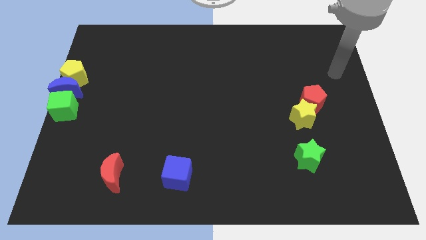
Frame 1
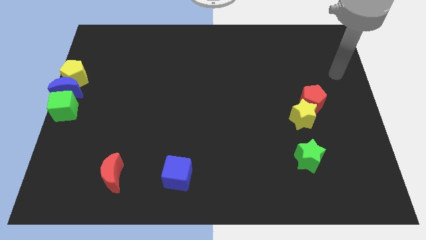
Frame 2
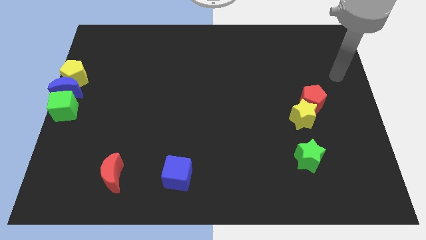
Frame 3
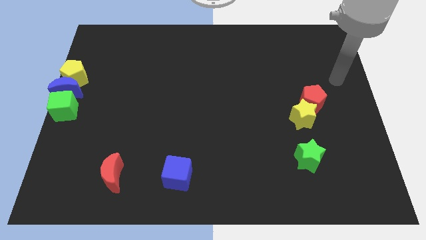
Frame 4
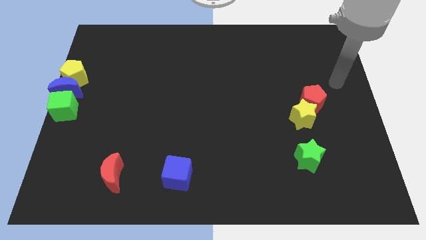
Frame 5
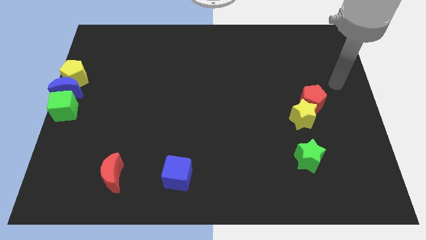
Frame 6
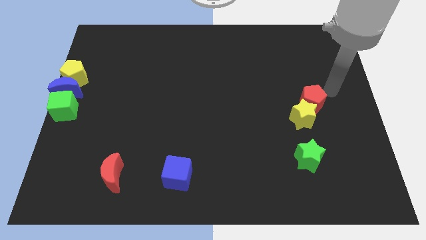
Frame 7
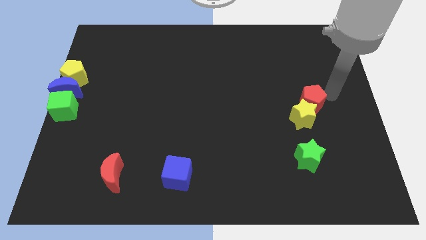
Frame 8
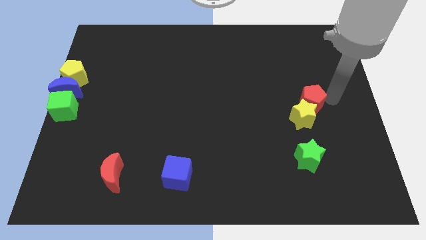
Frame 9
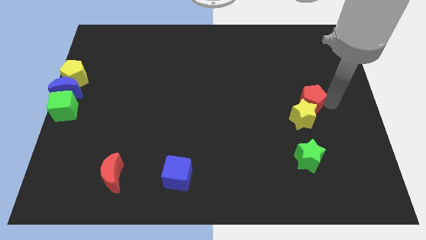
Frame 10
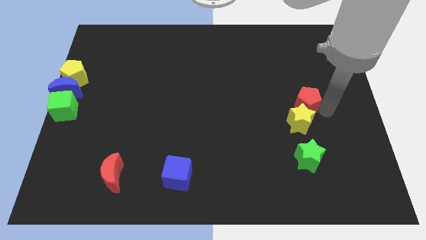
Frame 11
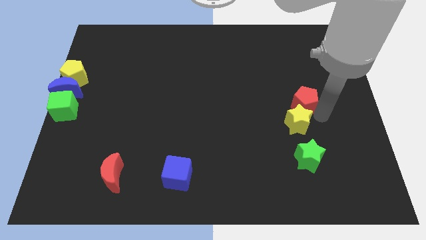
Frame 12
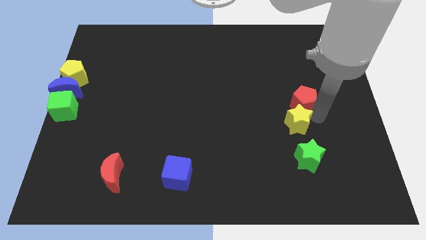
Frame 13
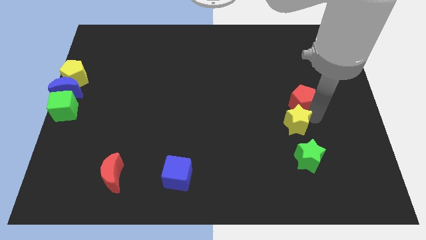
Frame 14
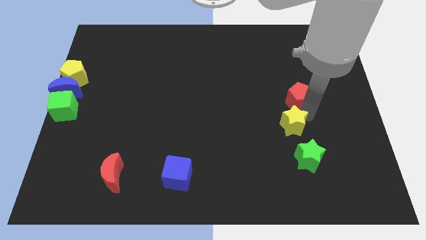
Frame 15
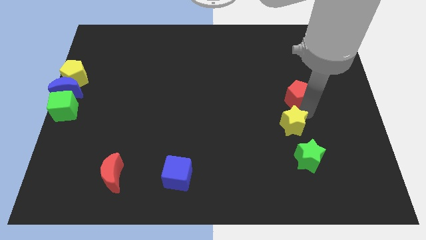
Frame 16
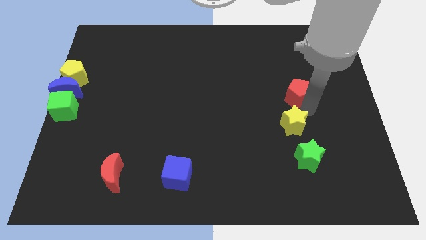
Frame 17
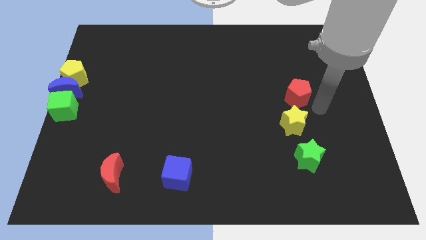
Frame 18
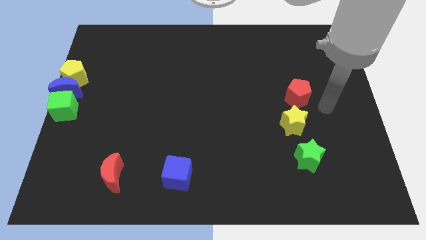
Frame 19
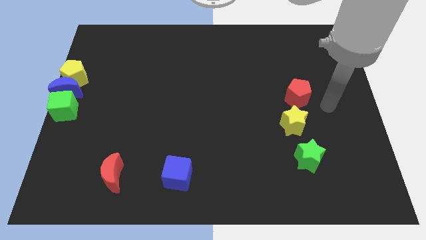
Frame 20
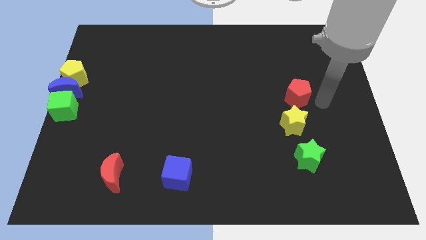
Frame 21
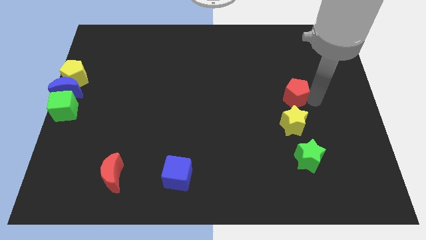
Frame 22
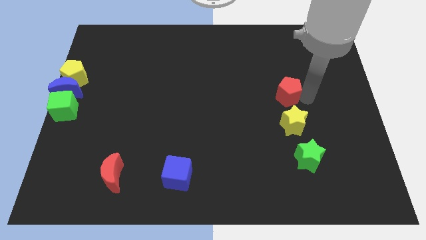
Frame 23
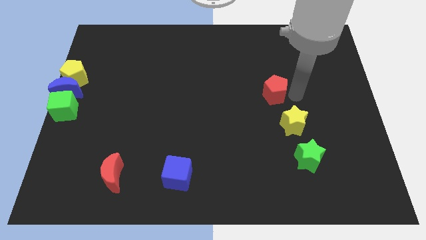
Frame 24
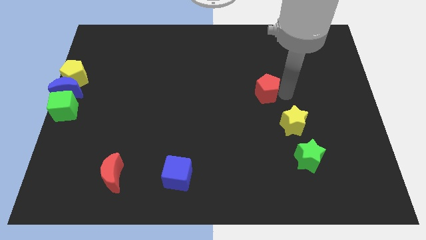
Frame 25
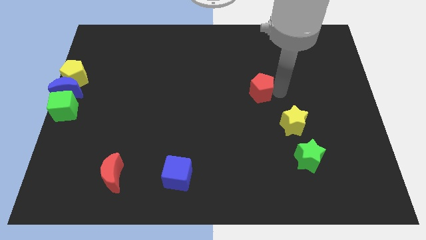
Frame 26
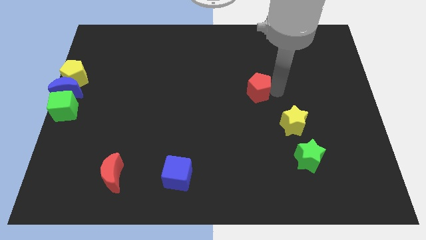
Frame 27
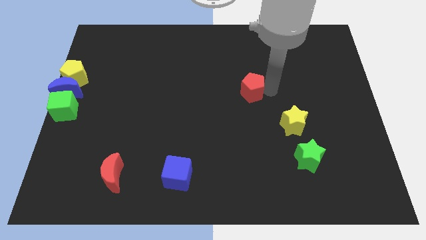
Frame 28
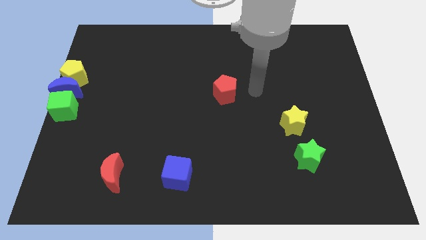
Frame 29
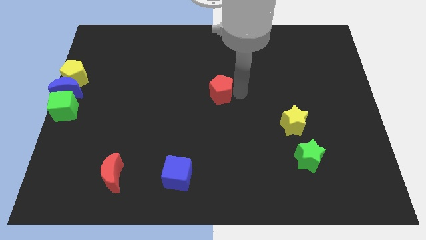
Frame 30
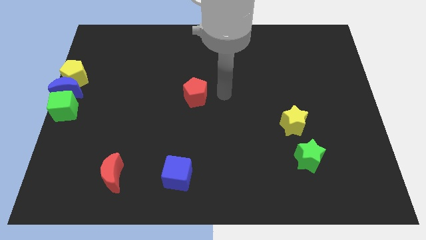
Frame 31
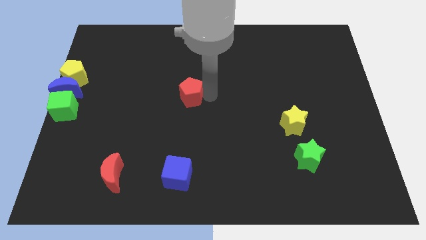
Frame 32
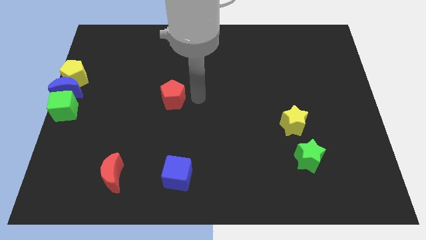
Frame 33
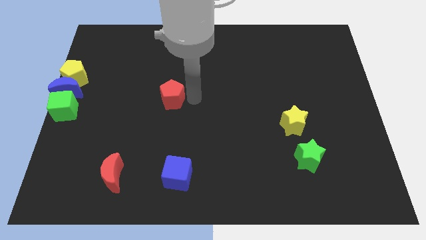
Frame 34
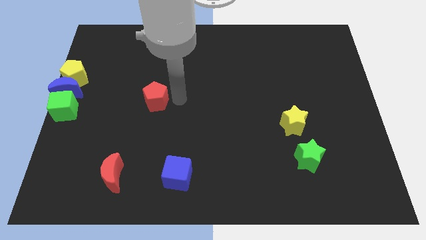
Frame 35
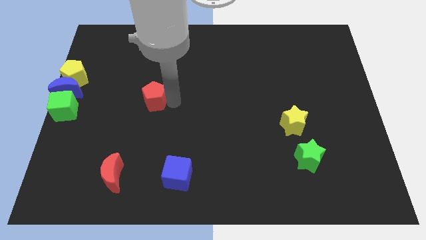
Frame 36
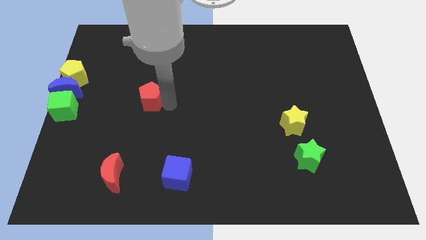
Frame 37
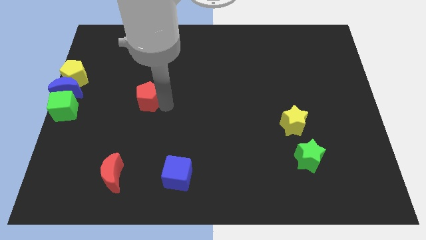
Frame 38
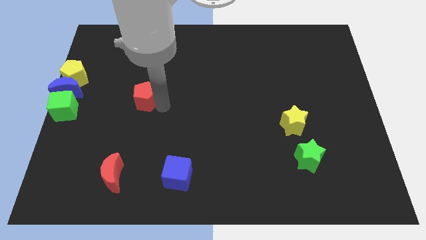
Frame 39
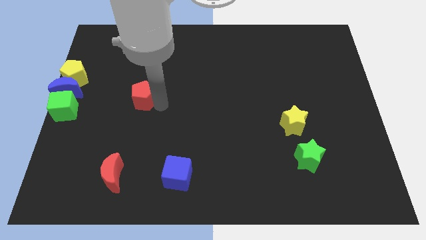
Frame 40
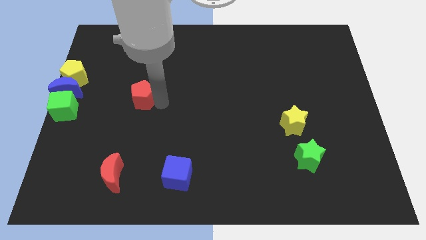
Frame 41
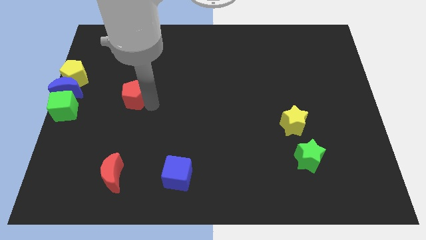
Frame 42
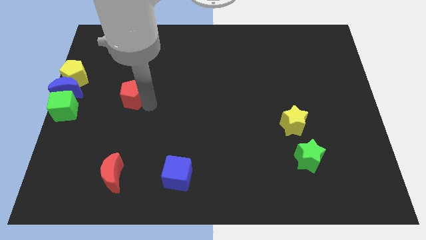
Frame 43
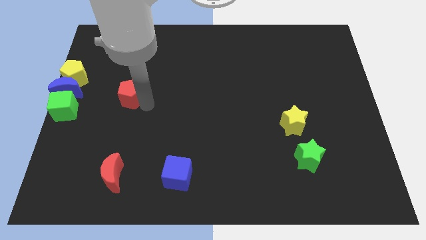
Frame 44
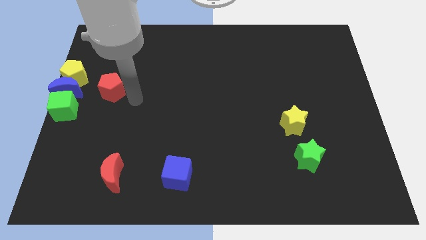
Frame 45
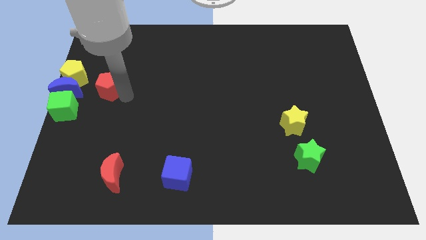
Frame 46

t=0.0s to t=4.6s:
move the red pentagon slightly to the left

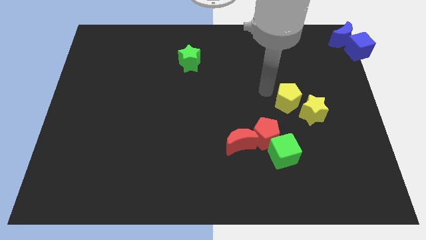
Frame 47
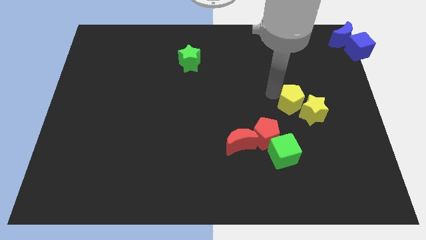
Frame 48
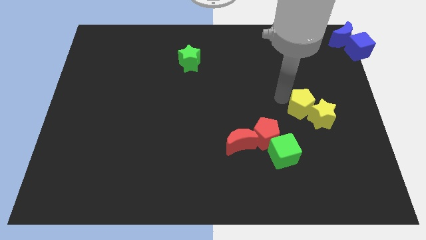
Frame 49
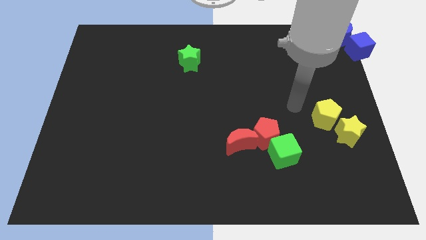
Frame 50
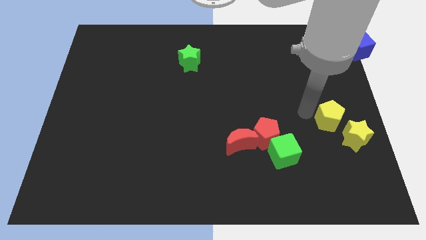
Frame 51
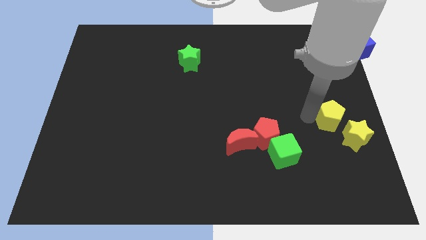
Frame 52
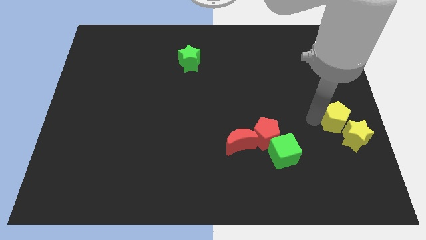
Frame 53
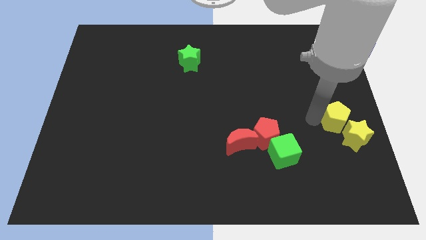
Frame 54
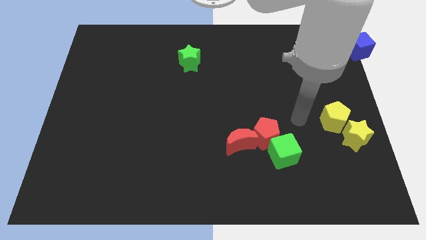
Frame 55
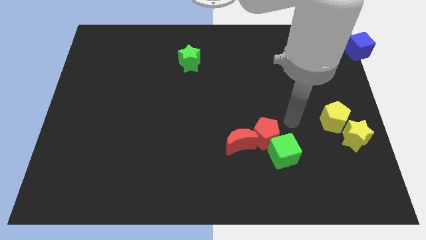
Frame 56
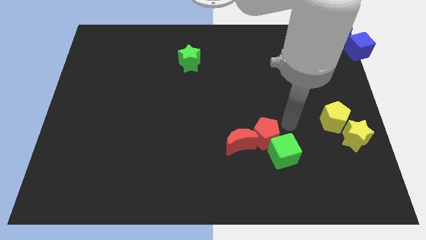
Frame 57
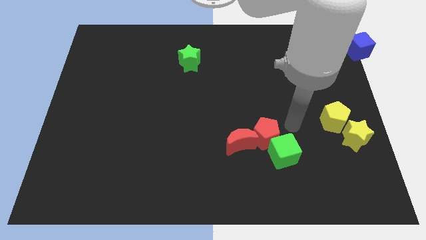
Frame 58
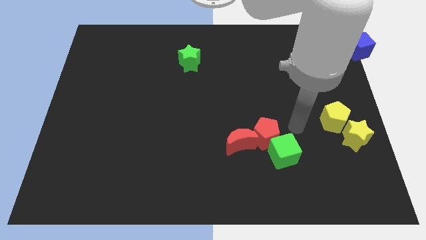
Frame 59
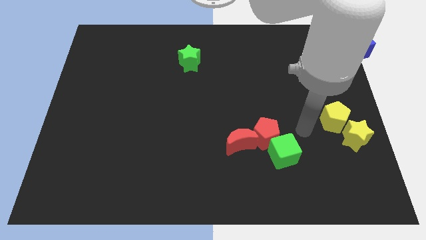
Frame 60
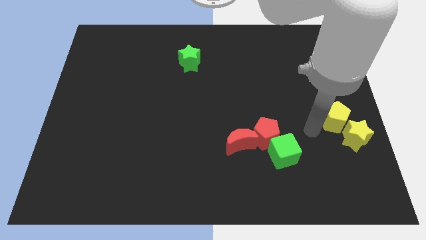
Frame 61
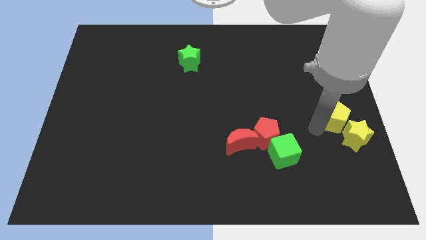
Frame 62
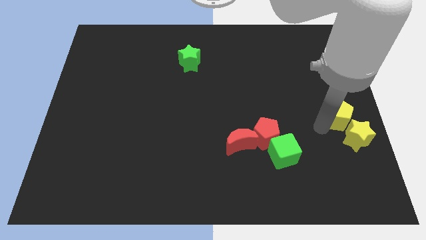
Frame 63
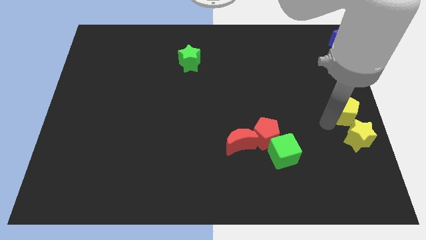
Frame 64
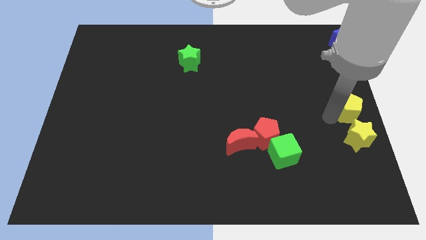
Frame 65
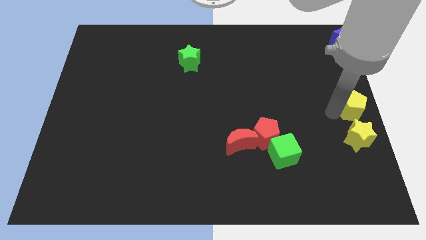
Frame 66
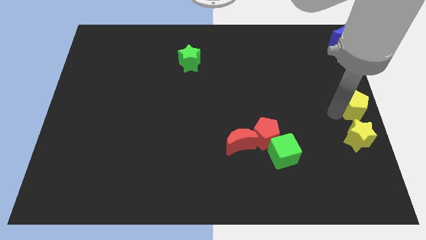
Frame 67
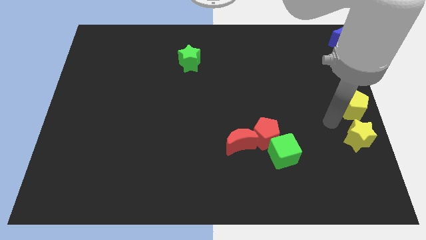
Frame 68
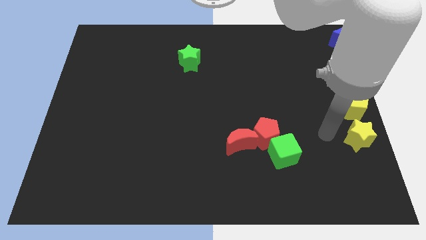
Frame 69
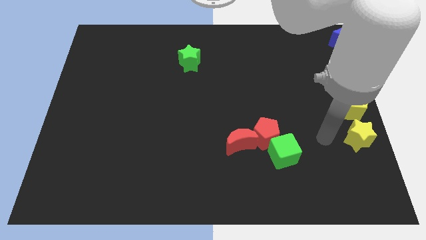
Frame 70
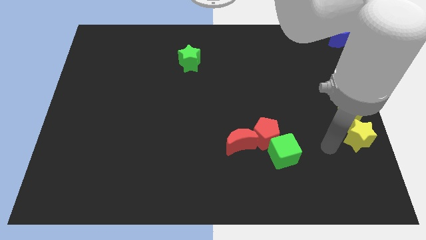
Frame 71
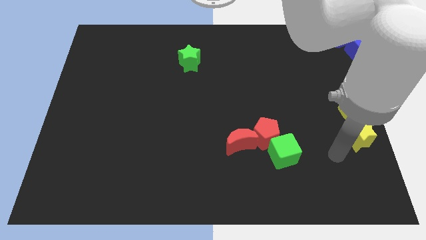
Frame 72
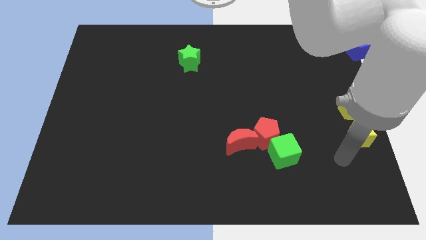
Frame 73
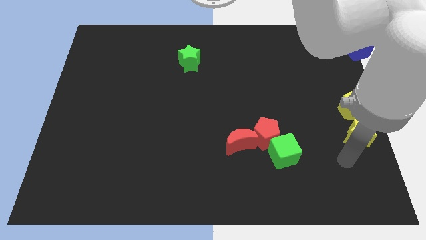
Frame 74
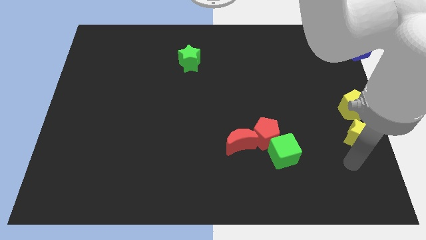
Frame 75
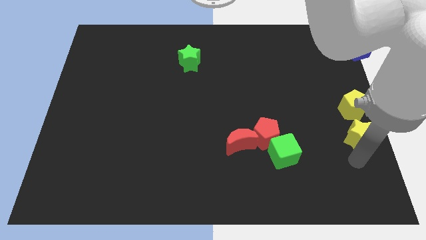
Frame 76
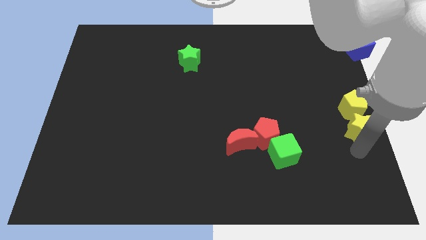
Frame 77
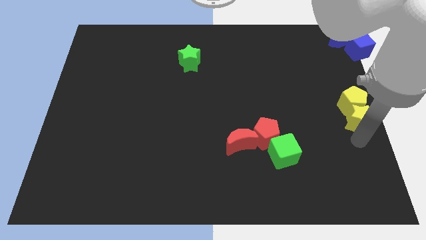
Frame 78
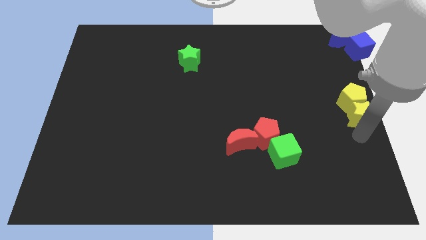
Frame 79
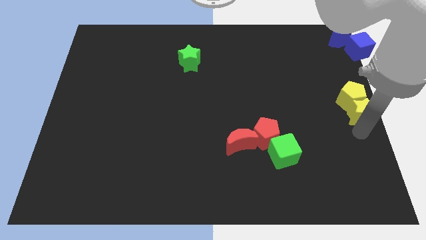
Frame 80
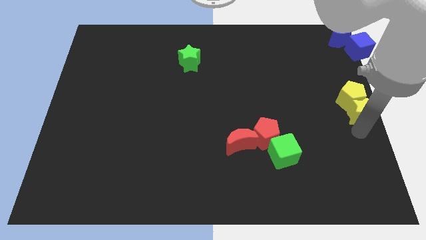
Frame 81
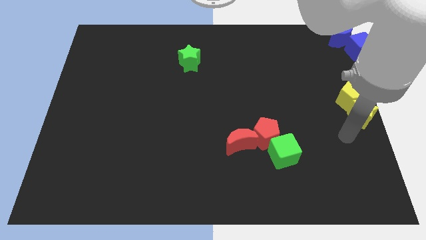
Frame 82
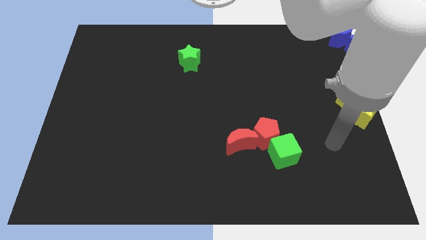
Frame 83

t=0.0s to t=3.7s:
push the yellow star along with the yellow pentgon to the right center of the board

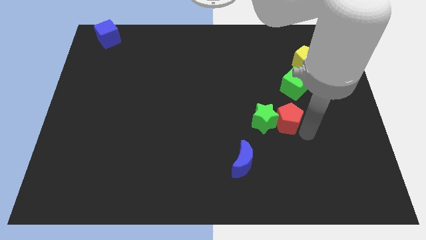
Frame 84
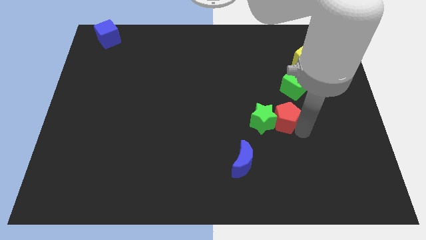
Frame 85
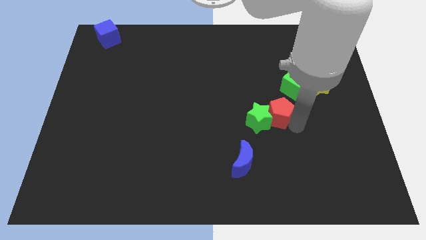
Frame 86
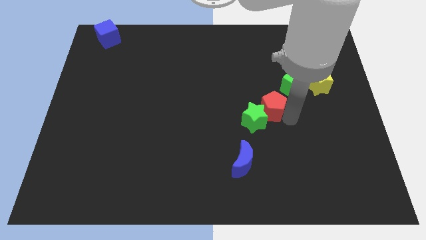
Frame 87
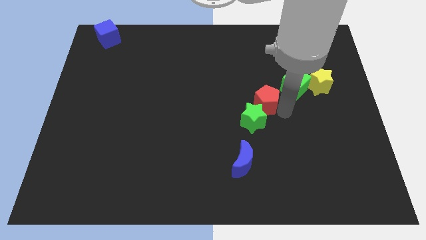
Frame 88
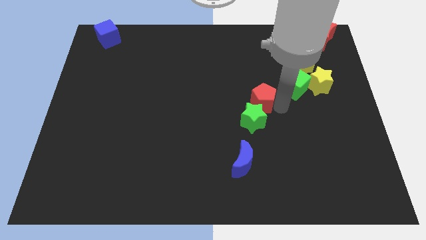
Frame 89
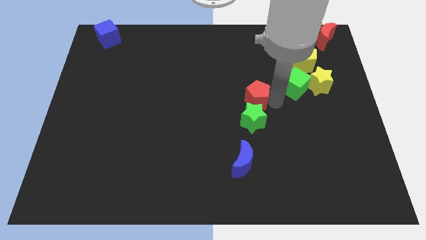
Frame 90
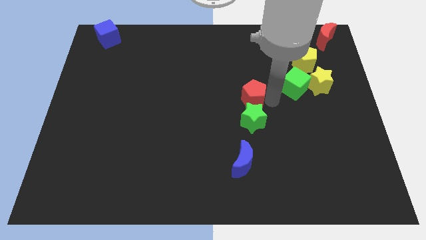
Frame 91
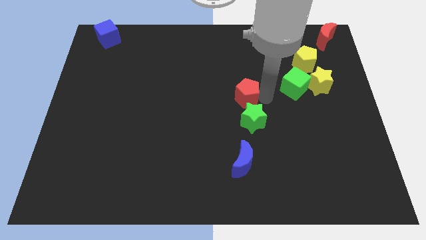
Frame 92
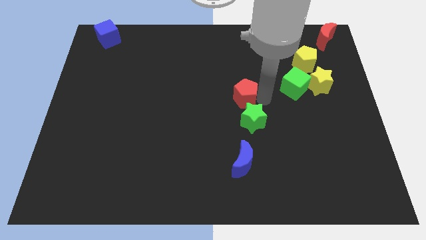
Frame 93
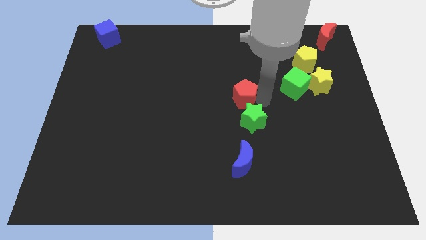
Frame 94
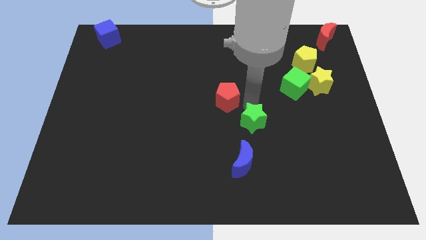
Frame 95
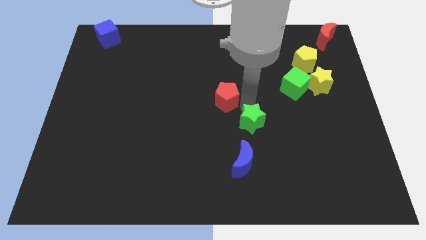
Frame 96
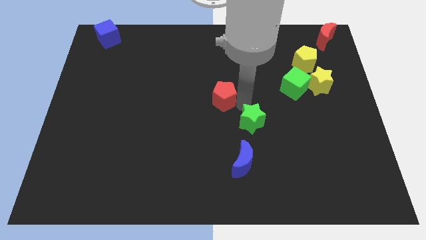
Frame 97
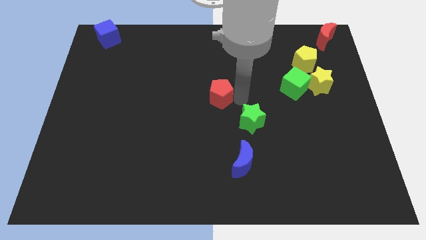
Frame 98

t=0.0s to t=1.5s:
move the red pentagon to the top left of the green star
